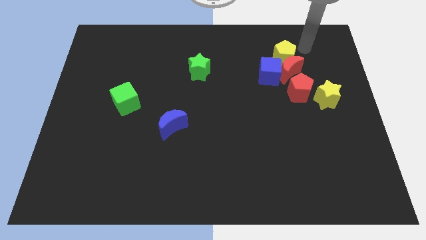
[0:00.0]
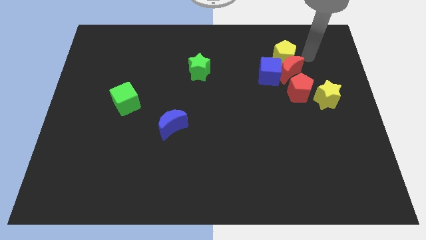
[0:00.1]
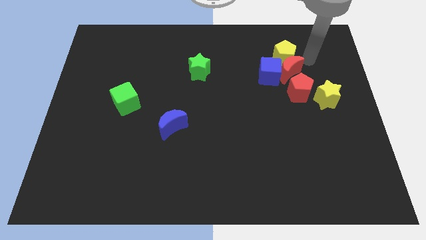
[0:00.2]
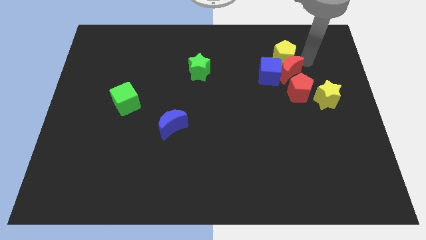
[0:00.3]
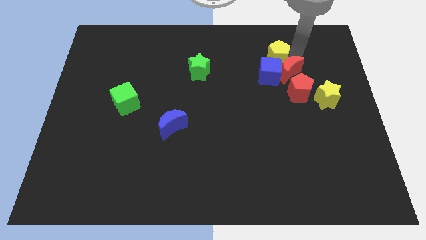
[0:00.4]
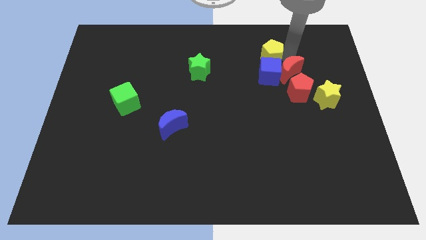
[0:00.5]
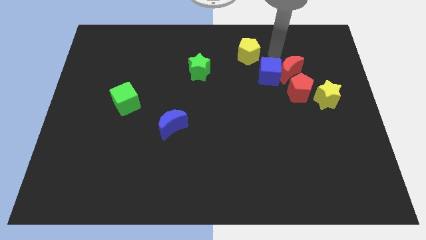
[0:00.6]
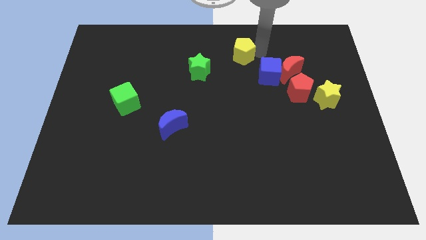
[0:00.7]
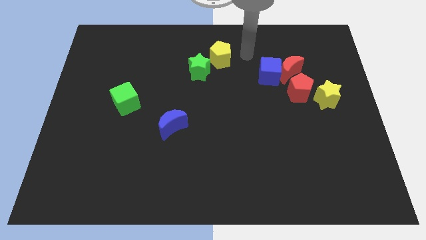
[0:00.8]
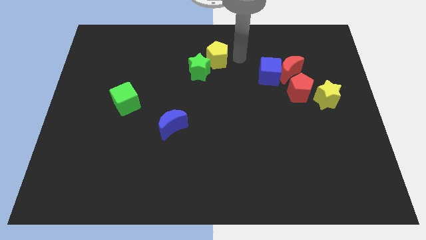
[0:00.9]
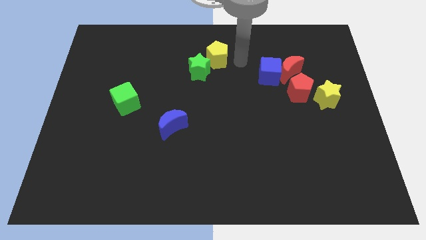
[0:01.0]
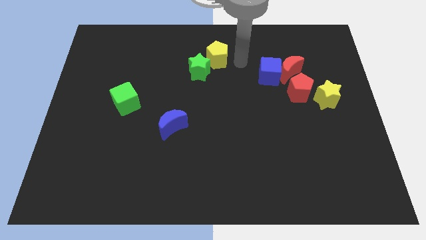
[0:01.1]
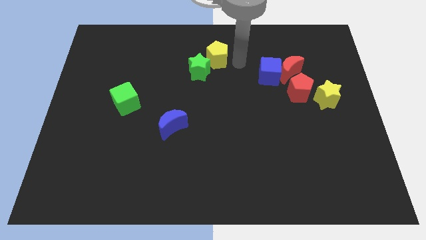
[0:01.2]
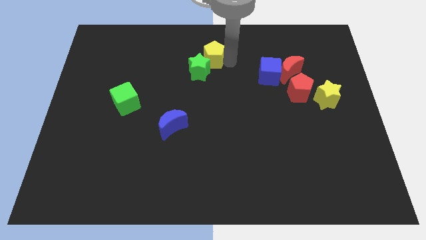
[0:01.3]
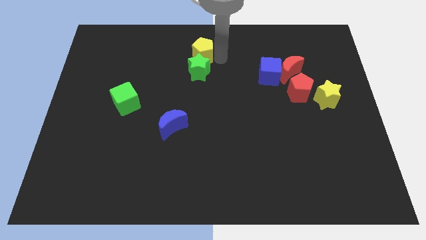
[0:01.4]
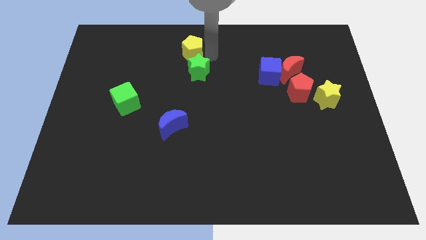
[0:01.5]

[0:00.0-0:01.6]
move the yellow pentagon on top of the green star

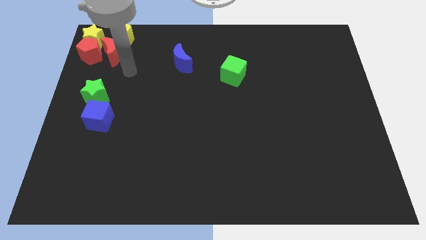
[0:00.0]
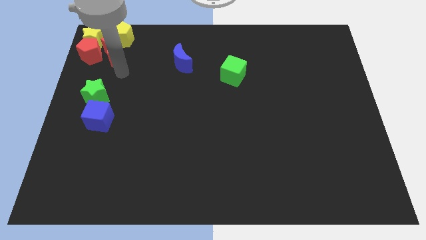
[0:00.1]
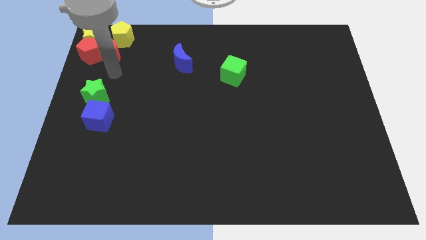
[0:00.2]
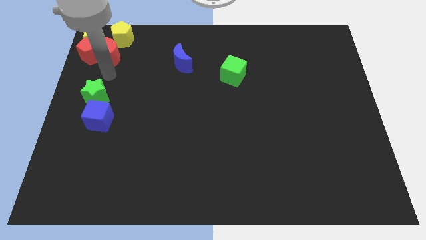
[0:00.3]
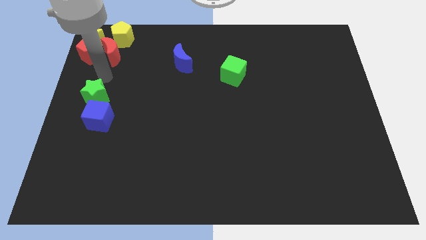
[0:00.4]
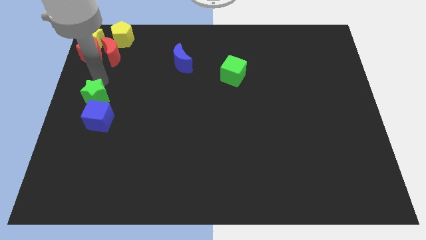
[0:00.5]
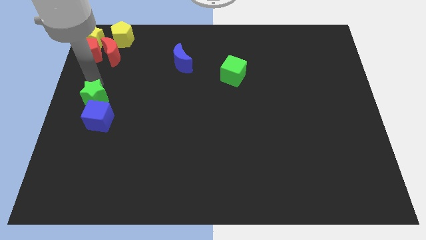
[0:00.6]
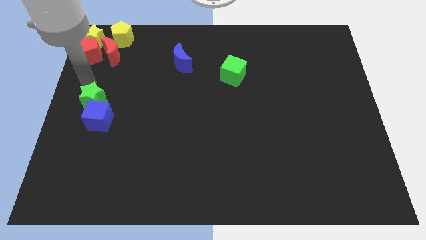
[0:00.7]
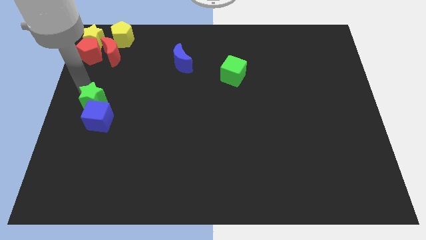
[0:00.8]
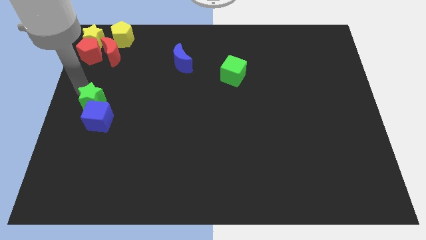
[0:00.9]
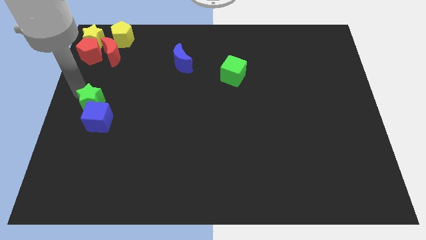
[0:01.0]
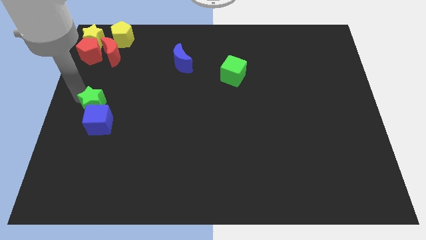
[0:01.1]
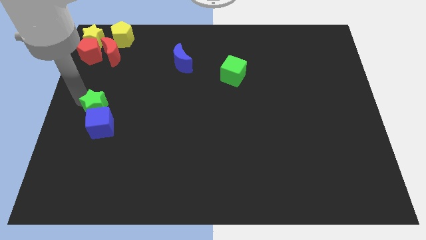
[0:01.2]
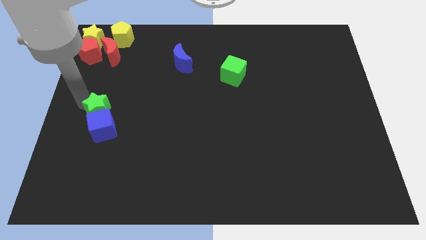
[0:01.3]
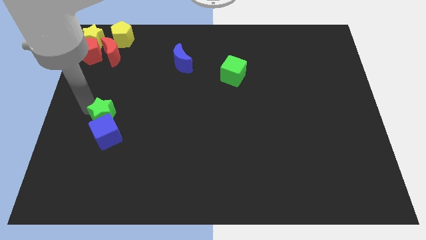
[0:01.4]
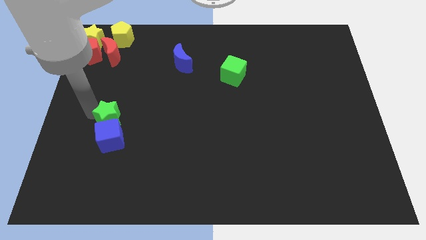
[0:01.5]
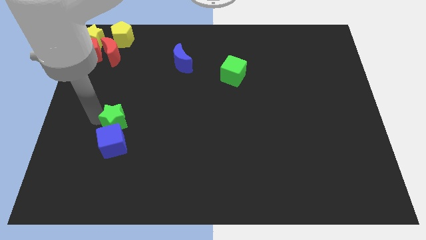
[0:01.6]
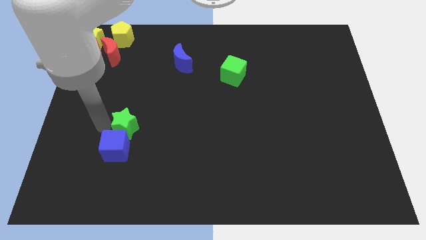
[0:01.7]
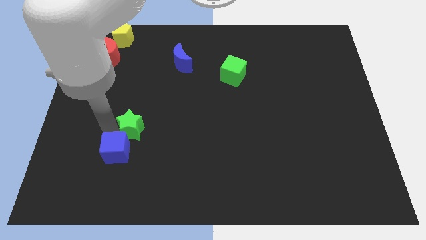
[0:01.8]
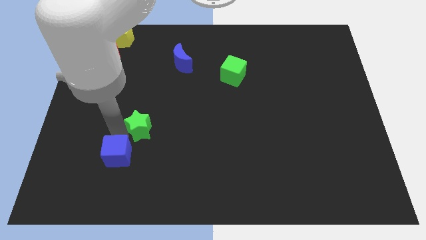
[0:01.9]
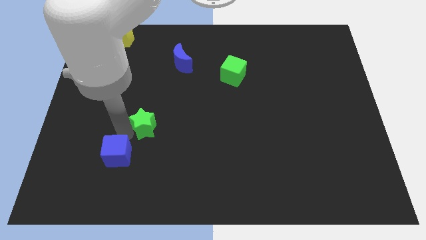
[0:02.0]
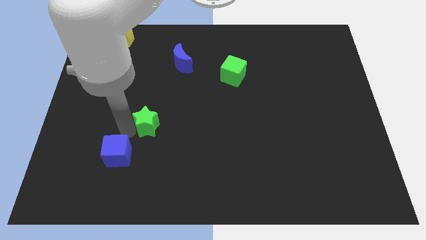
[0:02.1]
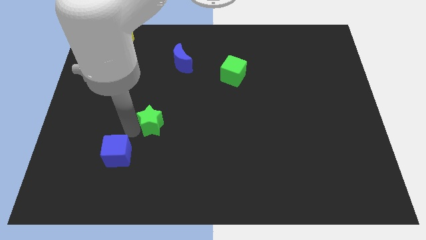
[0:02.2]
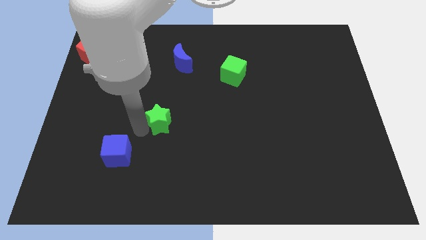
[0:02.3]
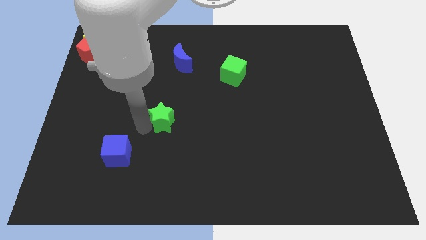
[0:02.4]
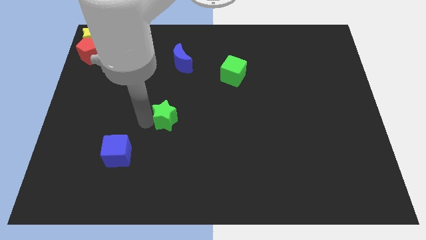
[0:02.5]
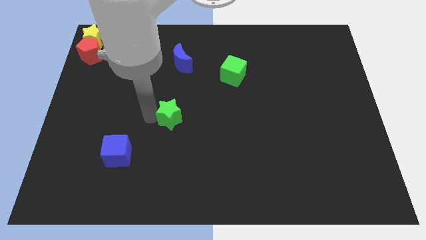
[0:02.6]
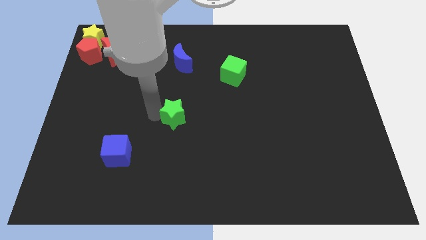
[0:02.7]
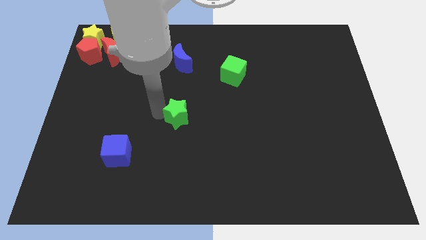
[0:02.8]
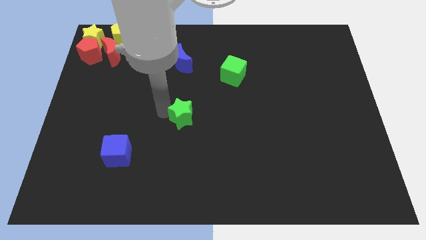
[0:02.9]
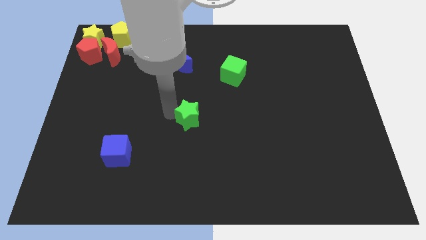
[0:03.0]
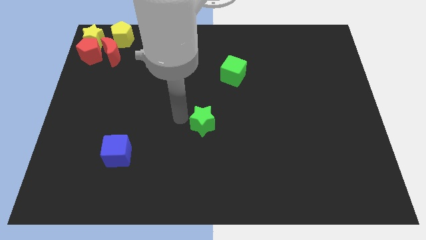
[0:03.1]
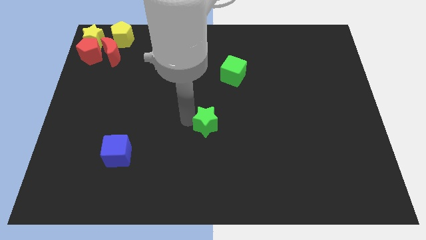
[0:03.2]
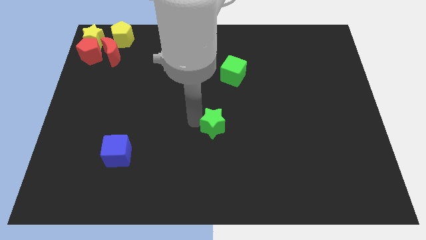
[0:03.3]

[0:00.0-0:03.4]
separate the blue cube and green star

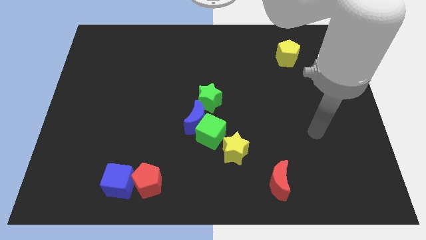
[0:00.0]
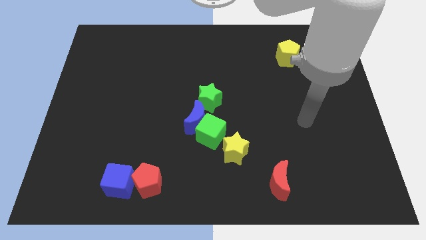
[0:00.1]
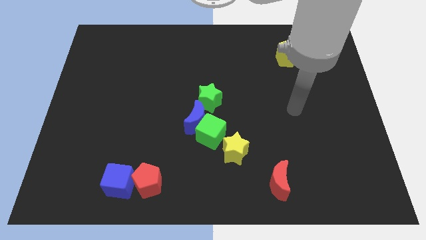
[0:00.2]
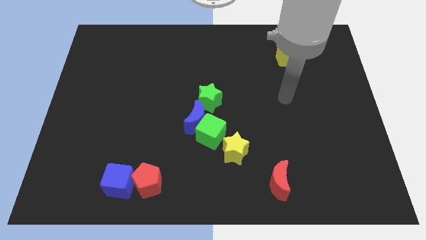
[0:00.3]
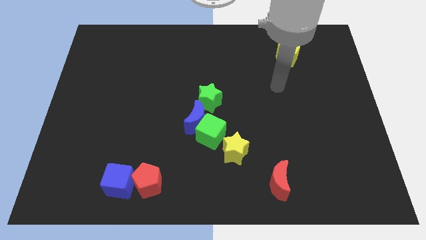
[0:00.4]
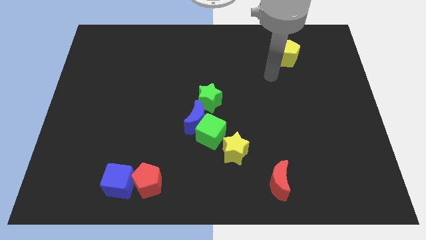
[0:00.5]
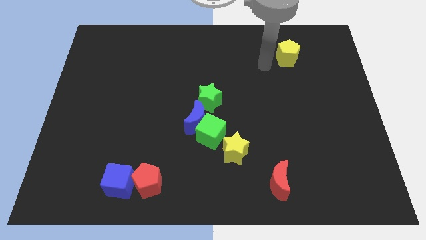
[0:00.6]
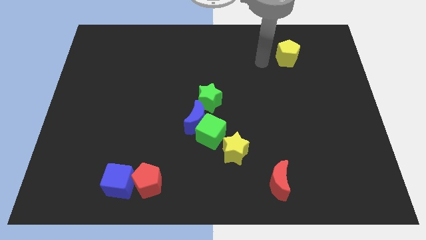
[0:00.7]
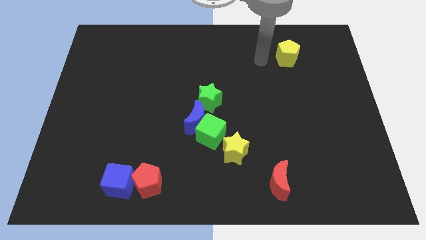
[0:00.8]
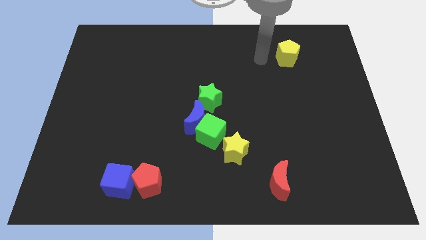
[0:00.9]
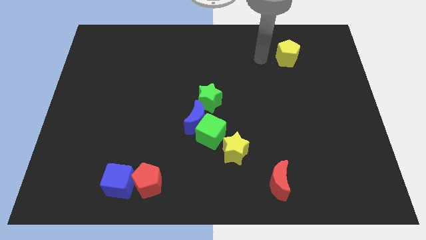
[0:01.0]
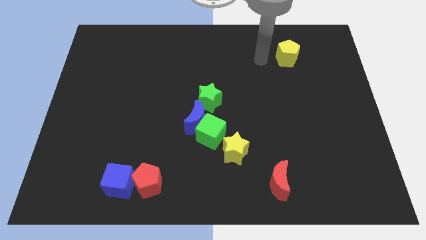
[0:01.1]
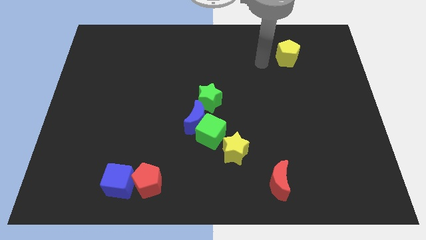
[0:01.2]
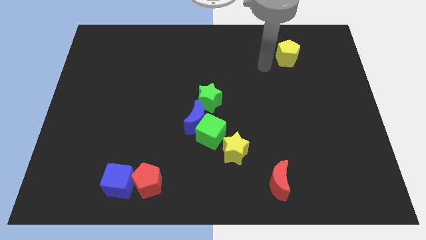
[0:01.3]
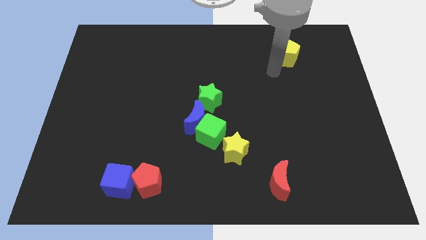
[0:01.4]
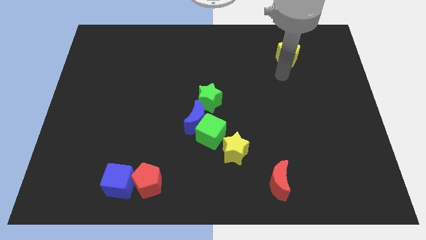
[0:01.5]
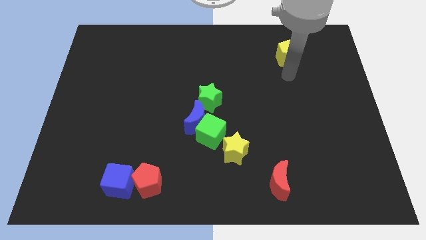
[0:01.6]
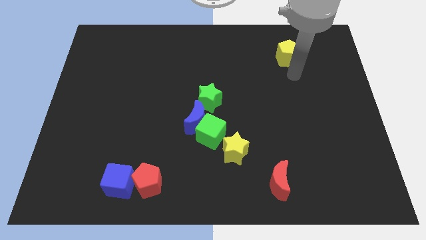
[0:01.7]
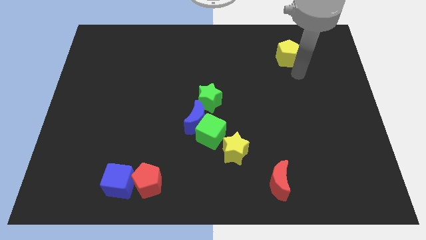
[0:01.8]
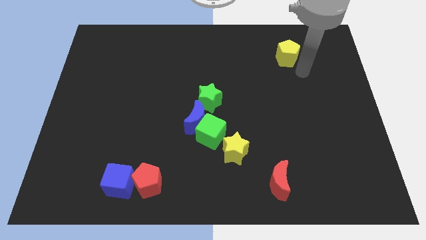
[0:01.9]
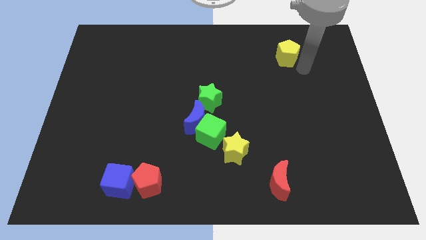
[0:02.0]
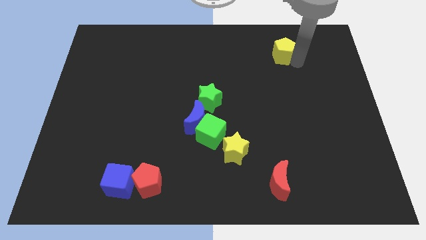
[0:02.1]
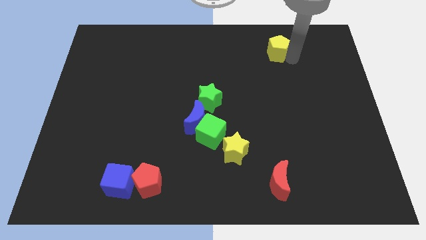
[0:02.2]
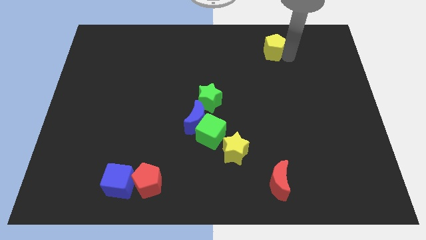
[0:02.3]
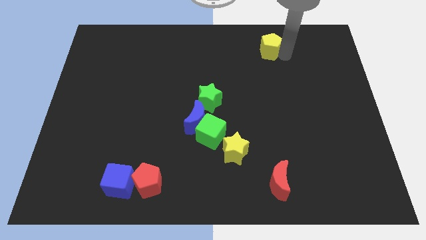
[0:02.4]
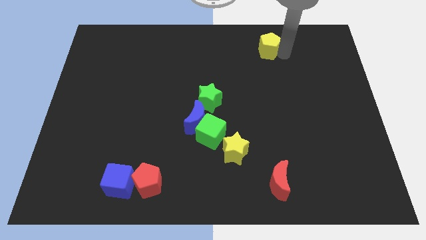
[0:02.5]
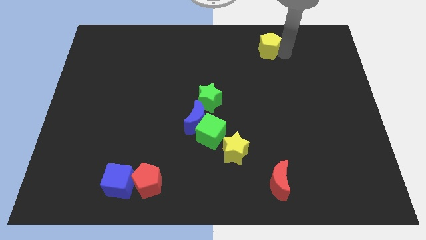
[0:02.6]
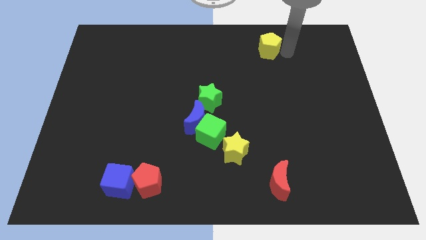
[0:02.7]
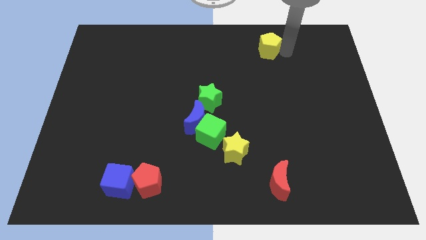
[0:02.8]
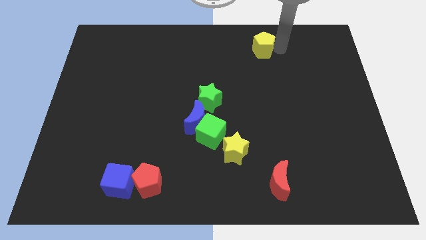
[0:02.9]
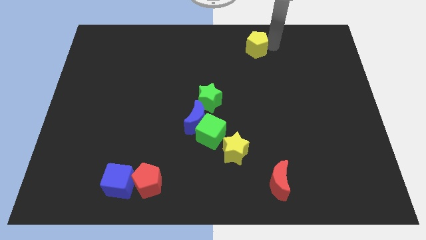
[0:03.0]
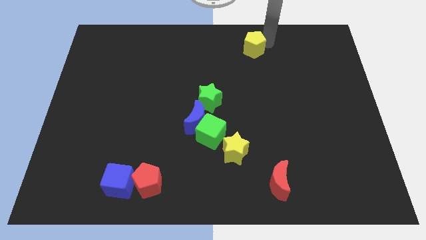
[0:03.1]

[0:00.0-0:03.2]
slightly push the yellow pentagon to the left

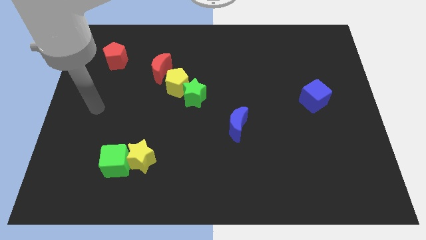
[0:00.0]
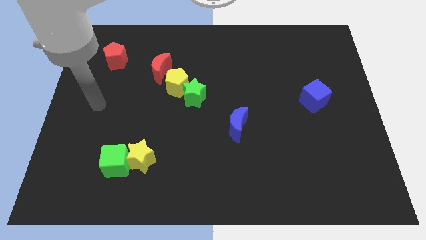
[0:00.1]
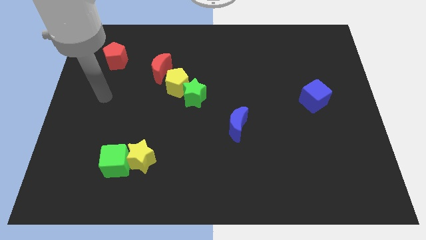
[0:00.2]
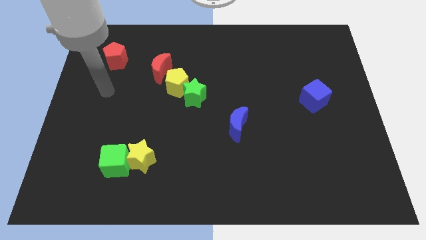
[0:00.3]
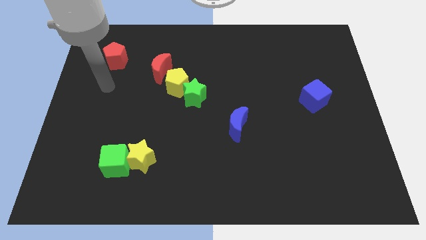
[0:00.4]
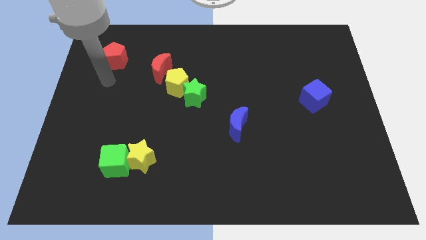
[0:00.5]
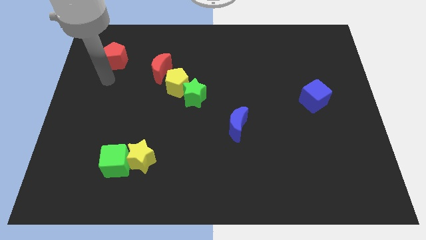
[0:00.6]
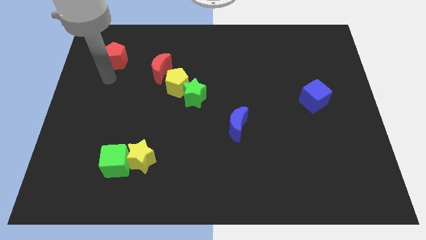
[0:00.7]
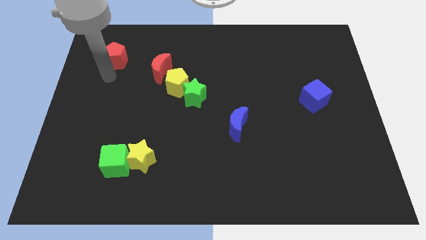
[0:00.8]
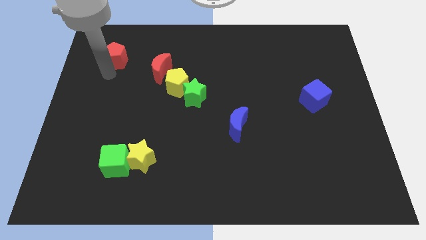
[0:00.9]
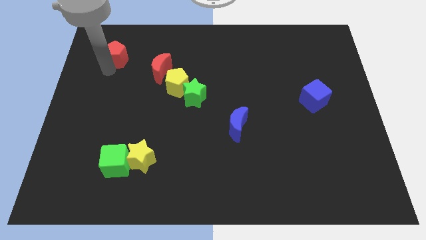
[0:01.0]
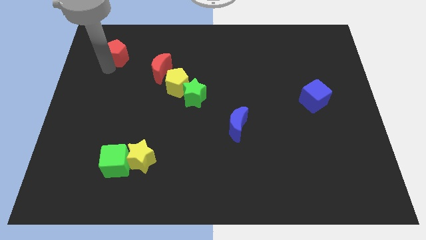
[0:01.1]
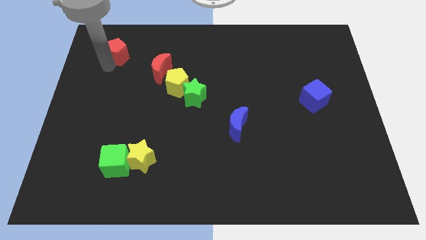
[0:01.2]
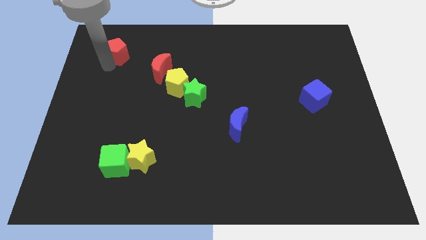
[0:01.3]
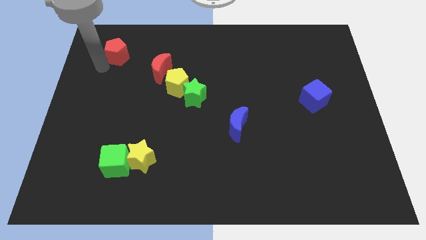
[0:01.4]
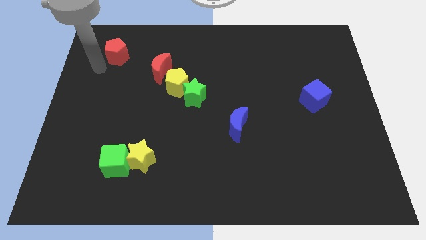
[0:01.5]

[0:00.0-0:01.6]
move your arm towards the red pentagon
